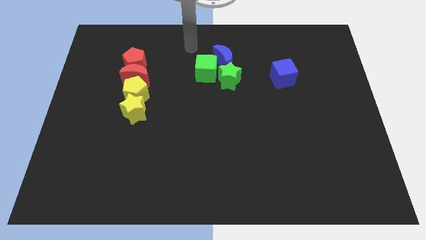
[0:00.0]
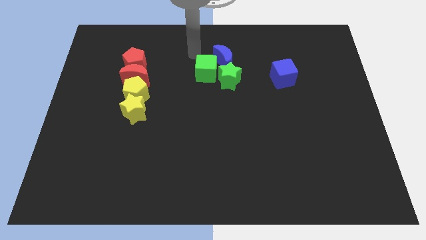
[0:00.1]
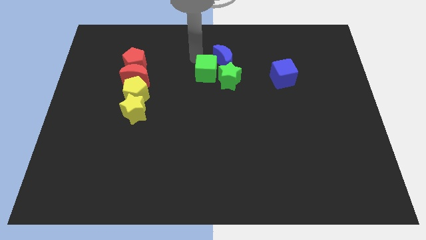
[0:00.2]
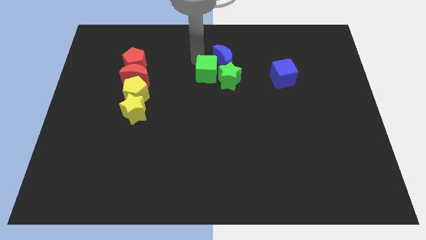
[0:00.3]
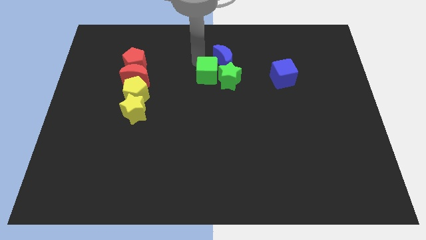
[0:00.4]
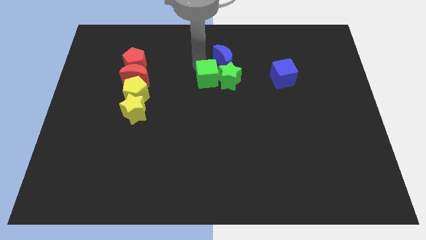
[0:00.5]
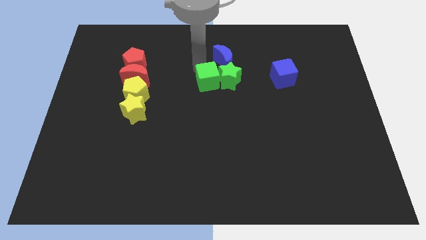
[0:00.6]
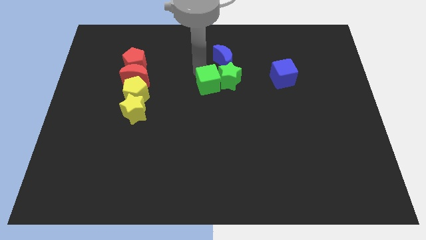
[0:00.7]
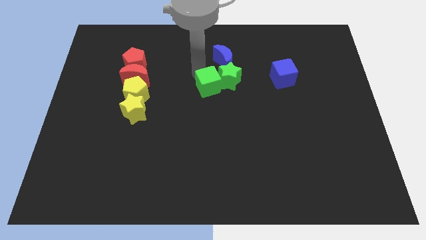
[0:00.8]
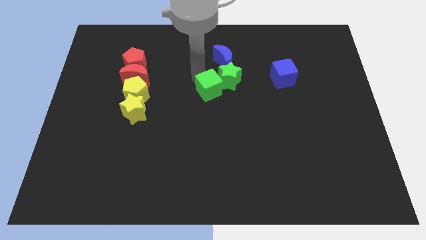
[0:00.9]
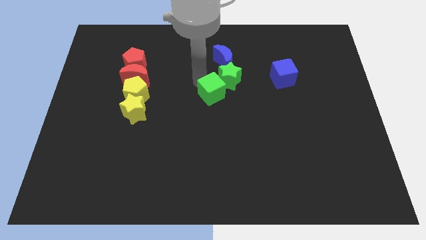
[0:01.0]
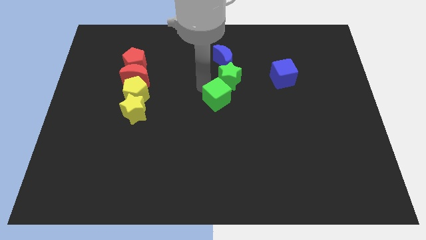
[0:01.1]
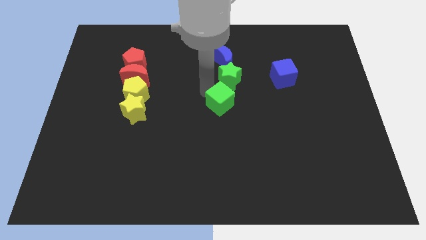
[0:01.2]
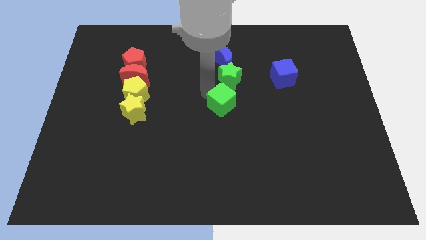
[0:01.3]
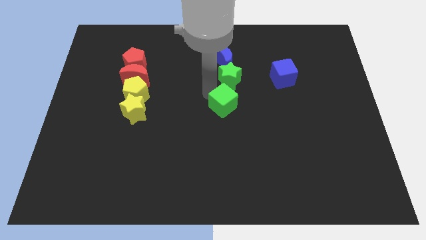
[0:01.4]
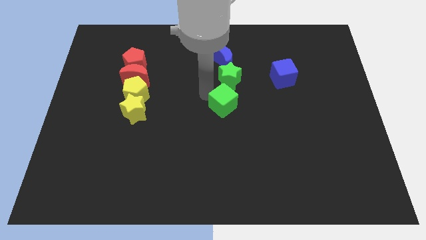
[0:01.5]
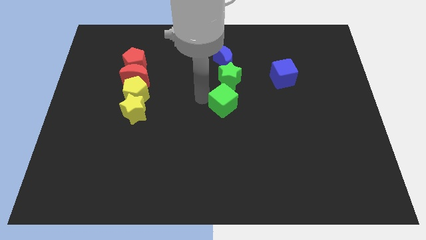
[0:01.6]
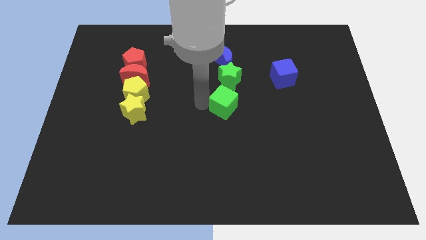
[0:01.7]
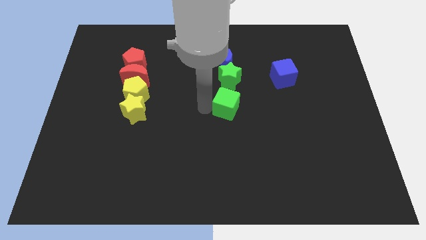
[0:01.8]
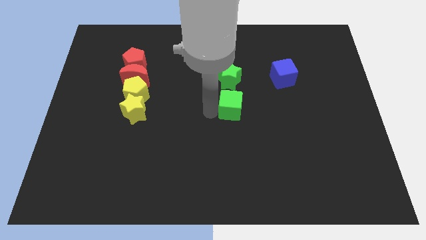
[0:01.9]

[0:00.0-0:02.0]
move the green cube below the green star

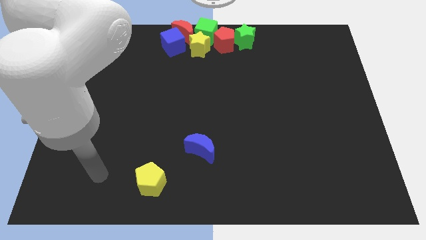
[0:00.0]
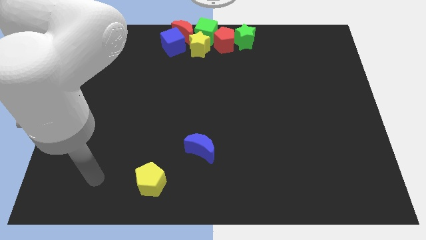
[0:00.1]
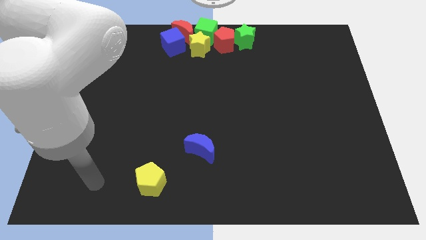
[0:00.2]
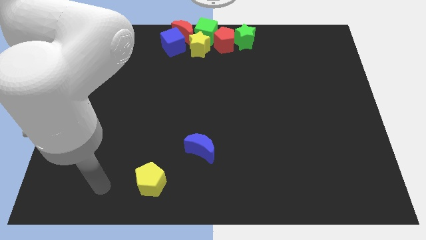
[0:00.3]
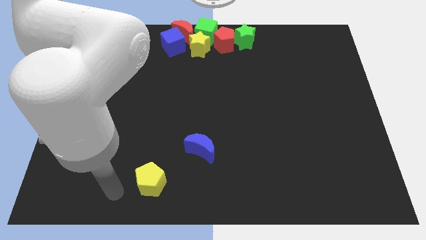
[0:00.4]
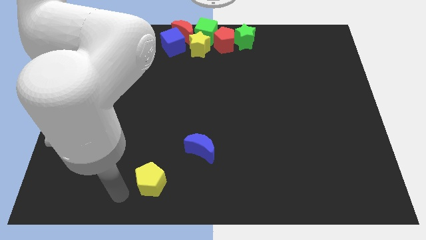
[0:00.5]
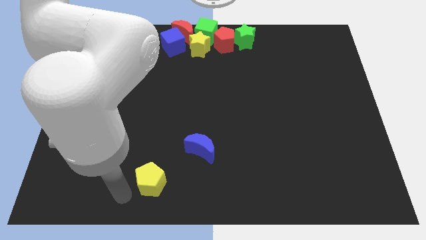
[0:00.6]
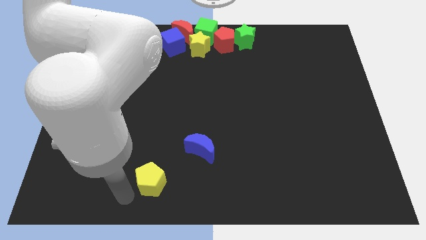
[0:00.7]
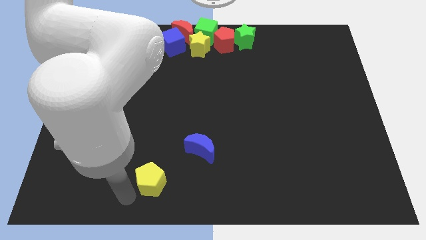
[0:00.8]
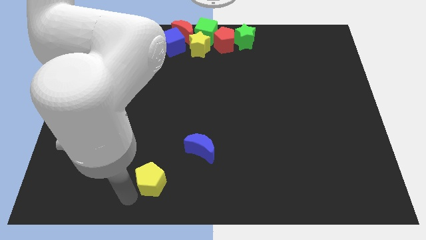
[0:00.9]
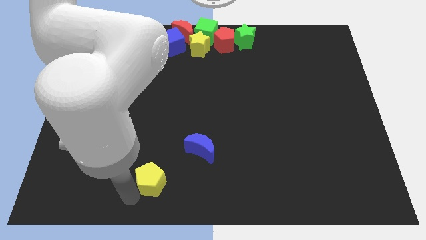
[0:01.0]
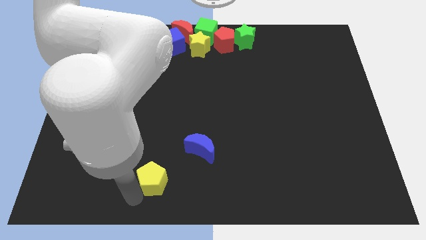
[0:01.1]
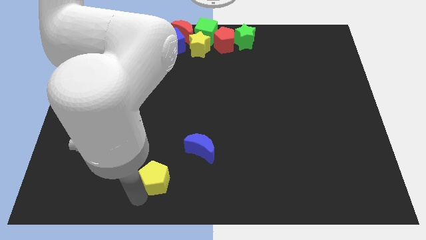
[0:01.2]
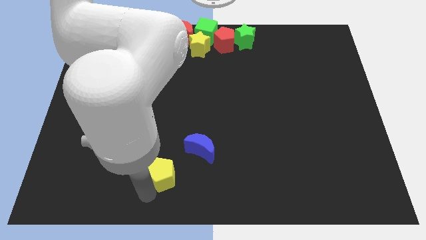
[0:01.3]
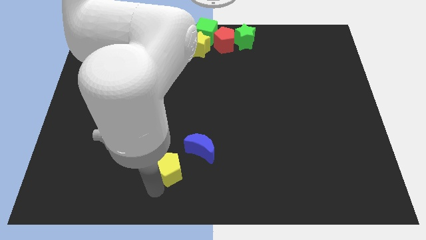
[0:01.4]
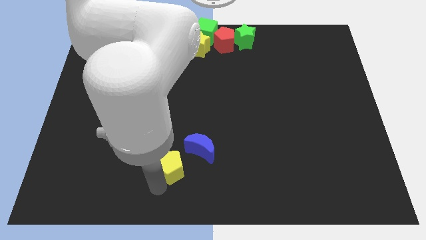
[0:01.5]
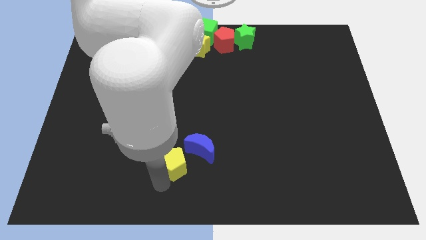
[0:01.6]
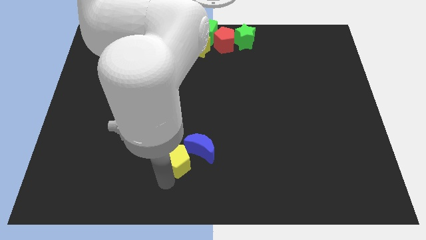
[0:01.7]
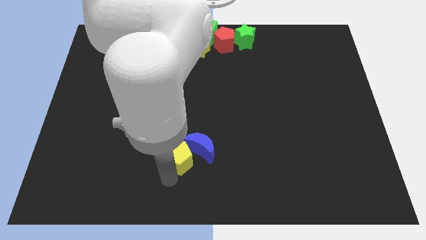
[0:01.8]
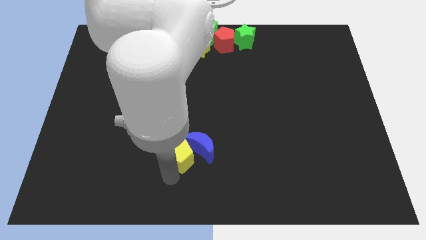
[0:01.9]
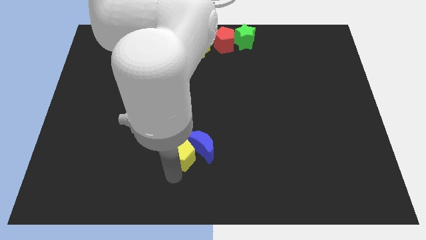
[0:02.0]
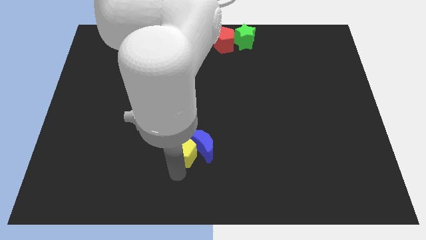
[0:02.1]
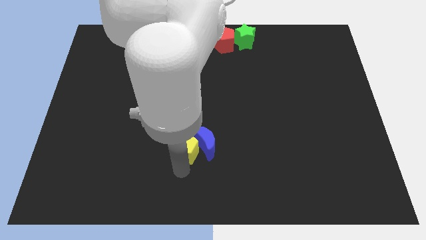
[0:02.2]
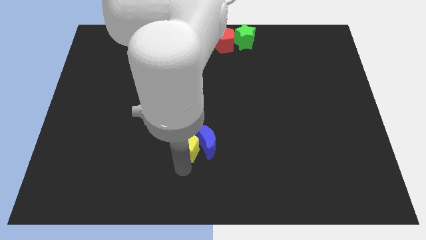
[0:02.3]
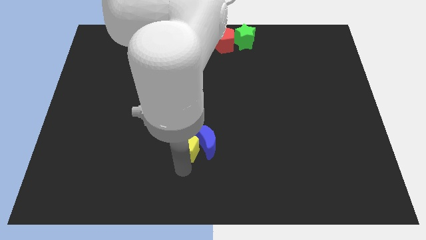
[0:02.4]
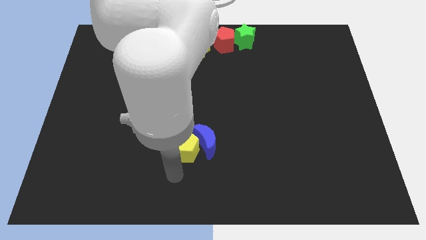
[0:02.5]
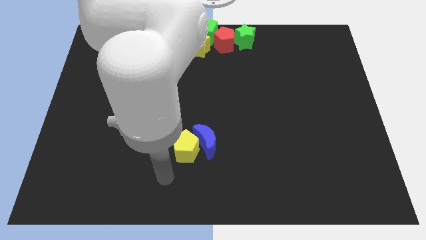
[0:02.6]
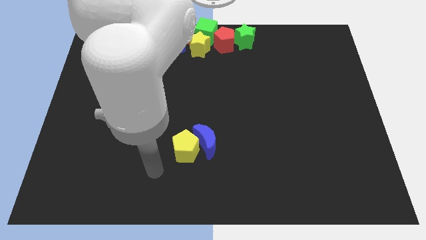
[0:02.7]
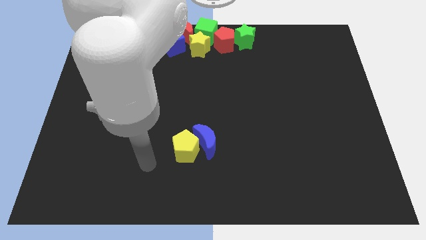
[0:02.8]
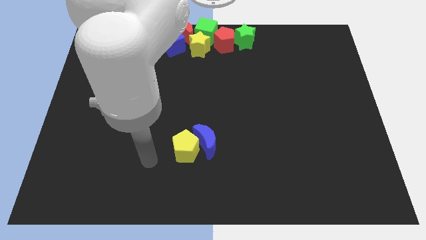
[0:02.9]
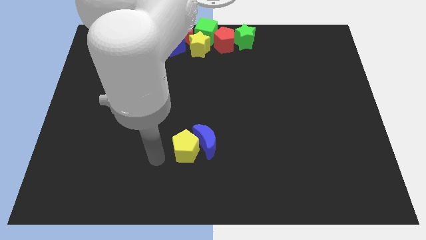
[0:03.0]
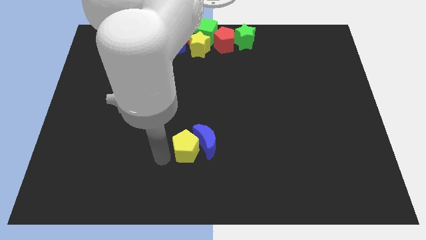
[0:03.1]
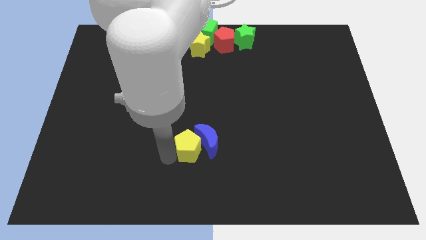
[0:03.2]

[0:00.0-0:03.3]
move the yellow pentagon into blue cube

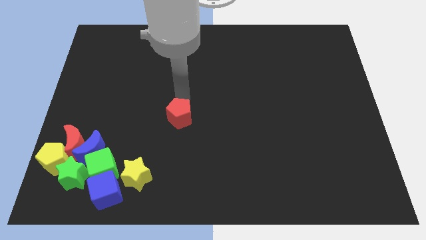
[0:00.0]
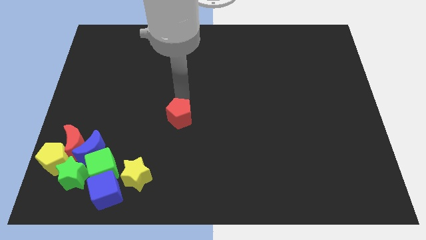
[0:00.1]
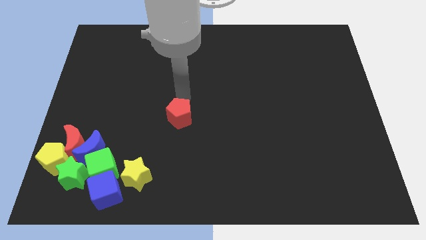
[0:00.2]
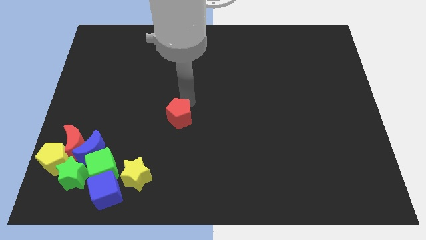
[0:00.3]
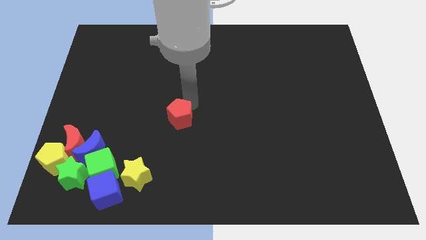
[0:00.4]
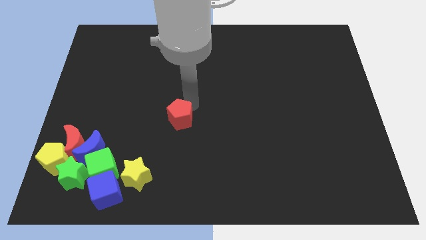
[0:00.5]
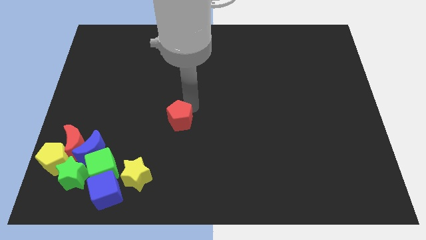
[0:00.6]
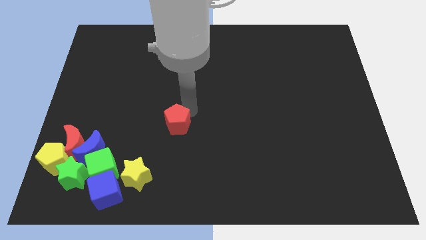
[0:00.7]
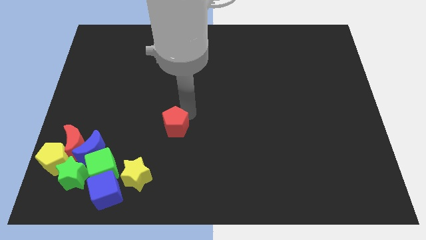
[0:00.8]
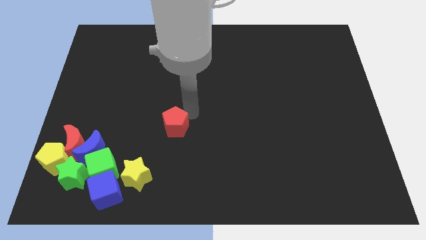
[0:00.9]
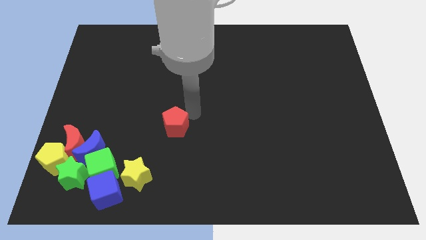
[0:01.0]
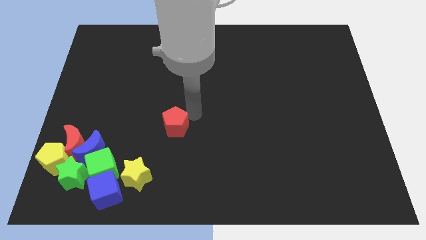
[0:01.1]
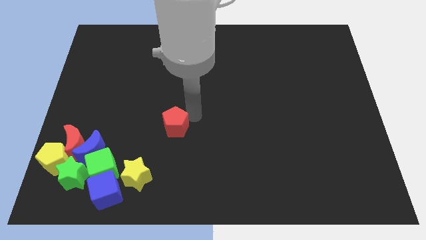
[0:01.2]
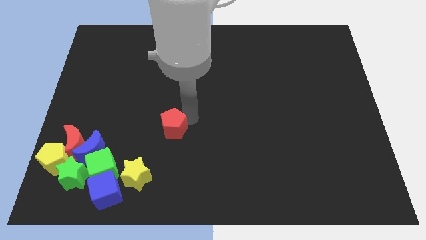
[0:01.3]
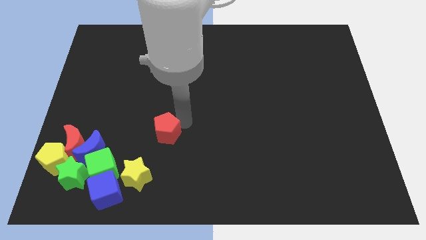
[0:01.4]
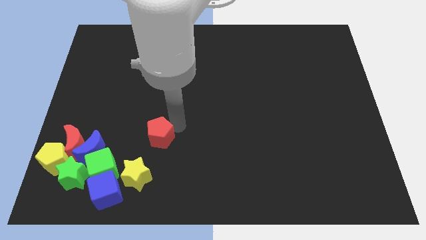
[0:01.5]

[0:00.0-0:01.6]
place the red pentagon diagonally to the top right of the yellow star

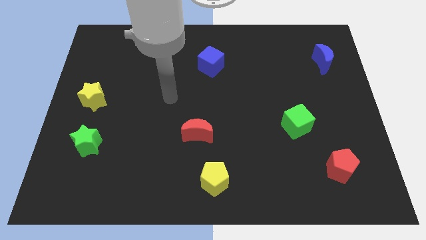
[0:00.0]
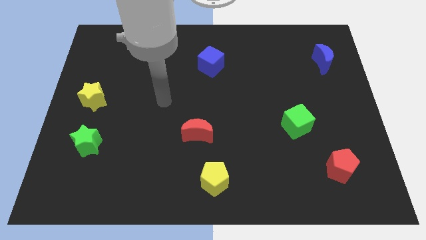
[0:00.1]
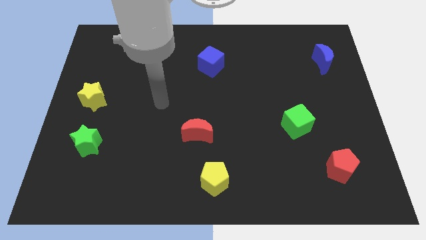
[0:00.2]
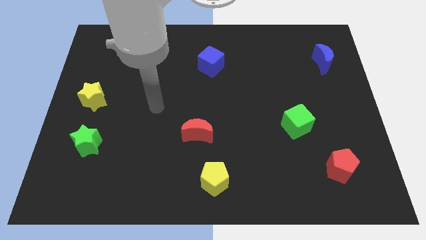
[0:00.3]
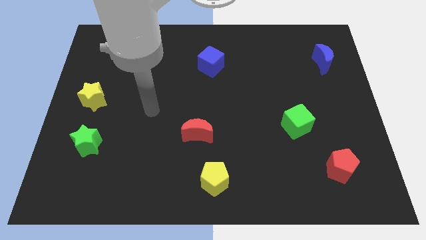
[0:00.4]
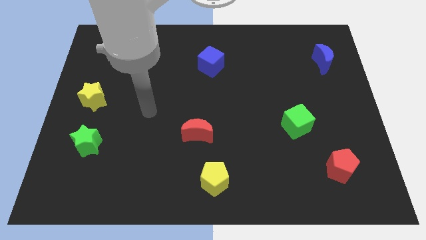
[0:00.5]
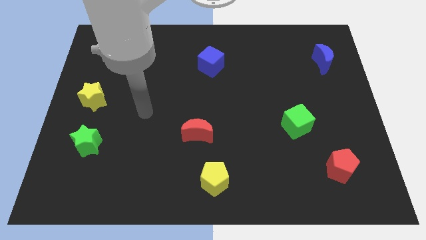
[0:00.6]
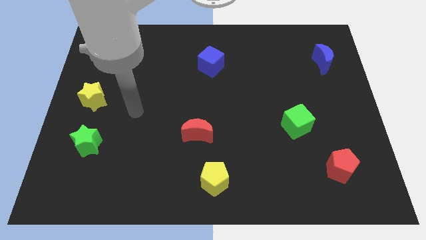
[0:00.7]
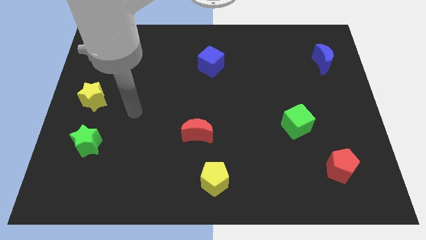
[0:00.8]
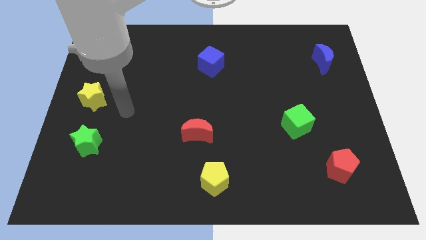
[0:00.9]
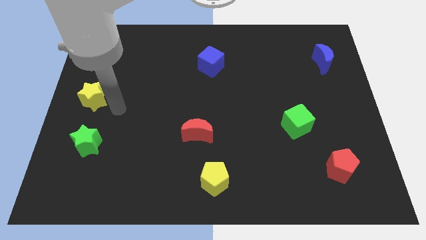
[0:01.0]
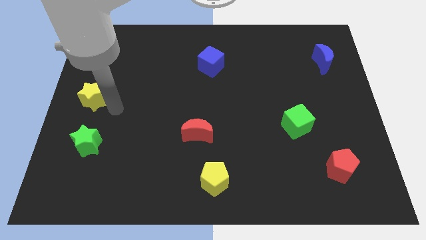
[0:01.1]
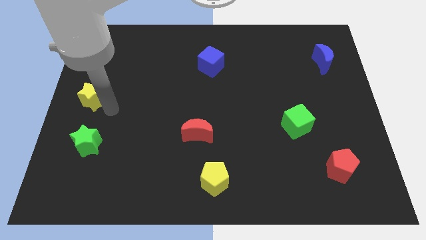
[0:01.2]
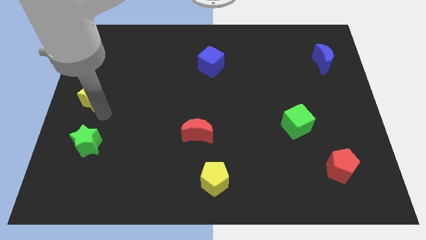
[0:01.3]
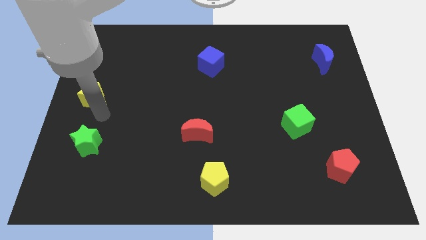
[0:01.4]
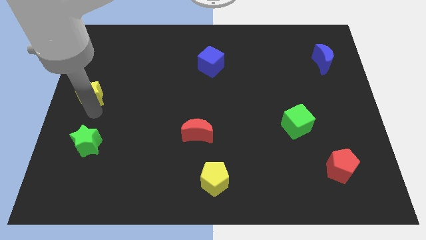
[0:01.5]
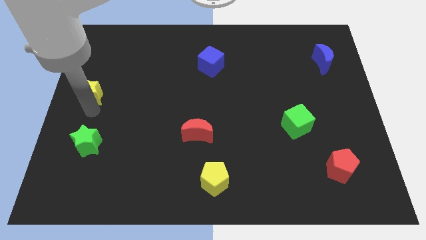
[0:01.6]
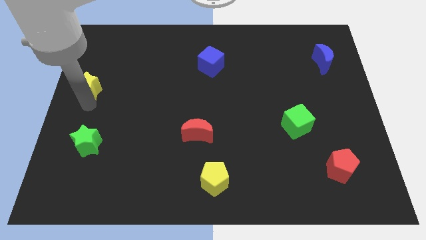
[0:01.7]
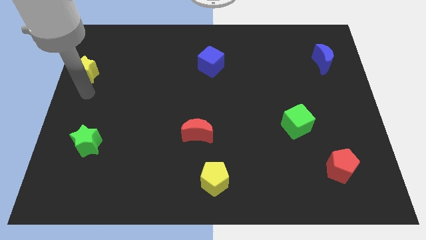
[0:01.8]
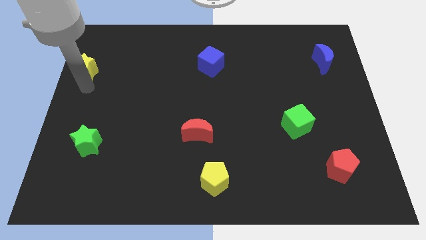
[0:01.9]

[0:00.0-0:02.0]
push yellow star slightly upwards
